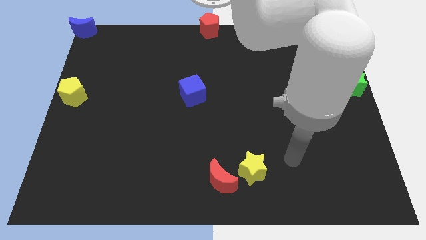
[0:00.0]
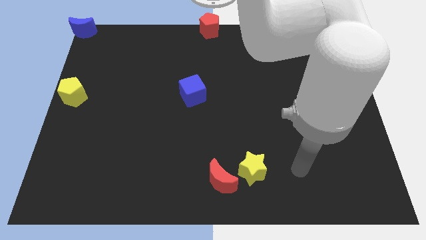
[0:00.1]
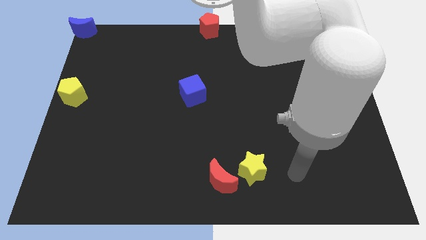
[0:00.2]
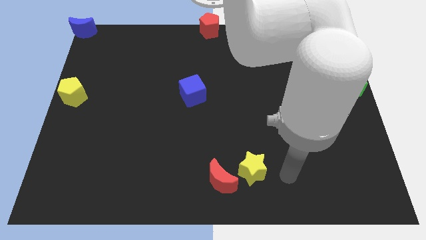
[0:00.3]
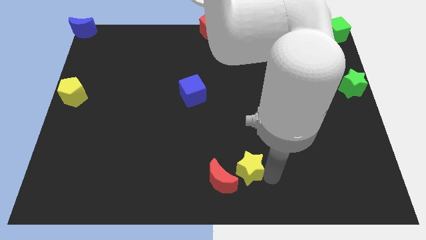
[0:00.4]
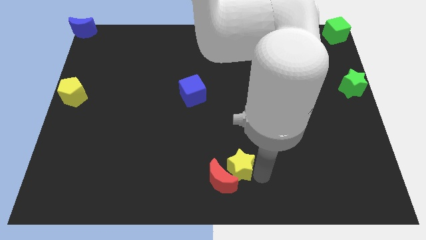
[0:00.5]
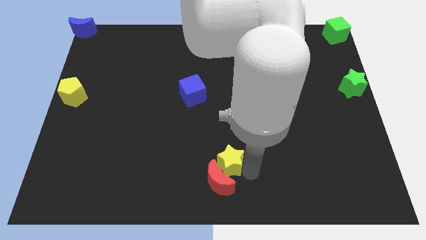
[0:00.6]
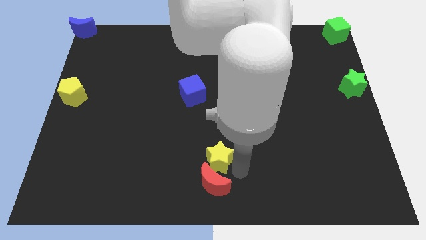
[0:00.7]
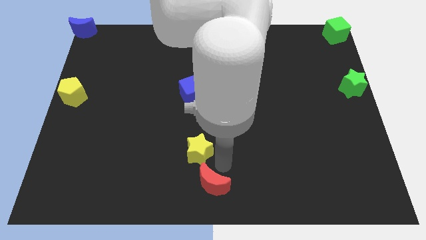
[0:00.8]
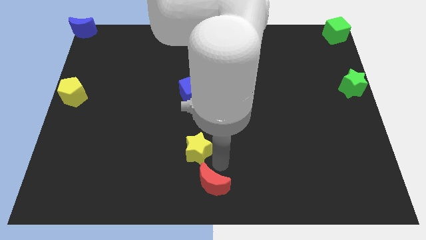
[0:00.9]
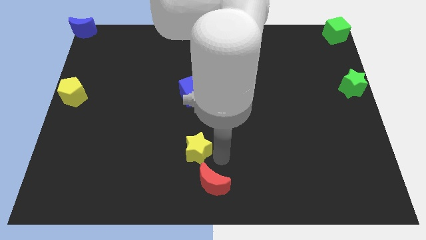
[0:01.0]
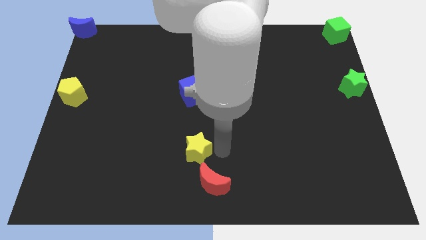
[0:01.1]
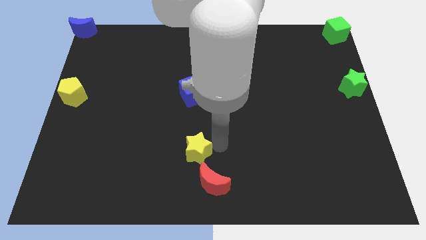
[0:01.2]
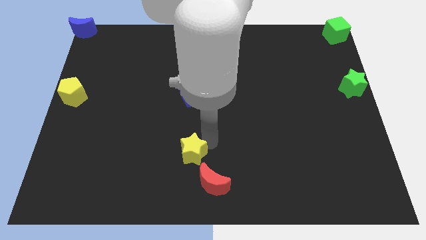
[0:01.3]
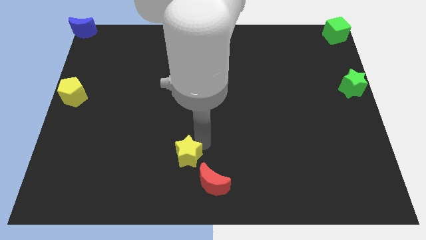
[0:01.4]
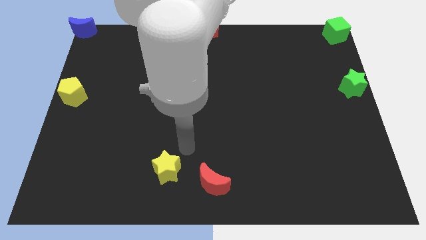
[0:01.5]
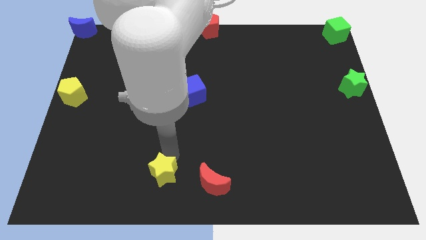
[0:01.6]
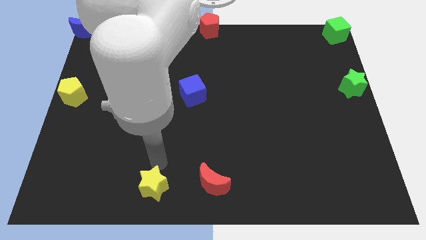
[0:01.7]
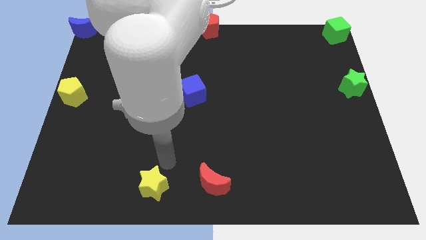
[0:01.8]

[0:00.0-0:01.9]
move the yellow star left to red crescent

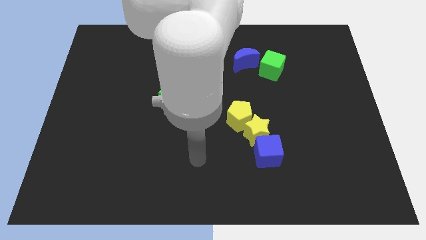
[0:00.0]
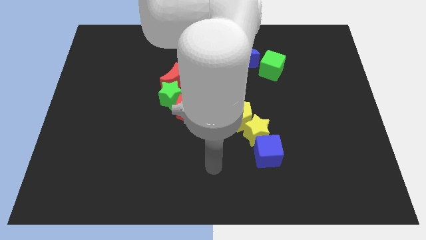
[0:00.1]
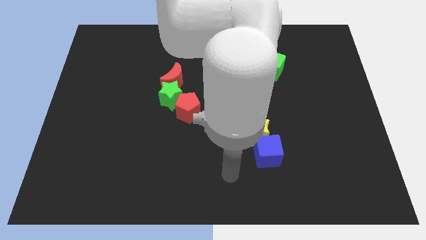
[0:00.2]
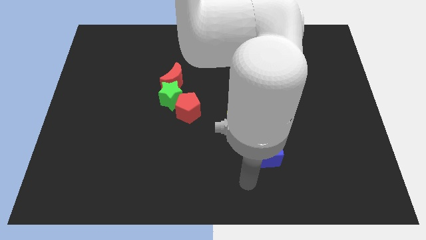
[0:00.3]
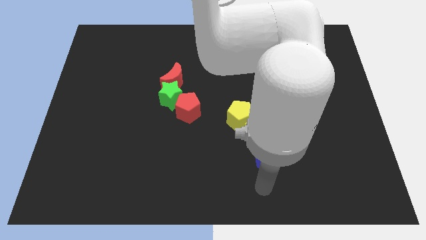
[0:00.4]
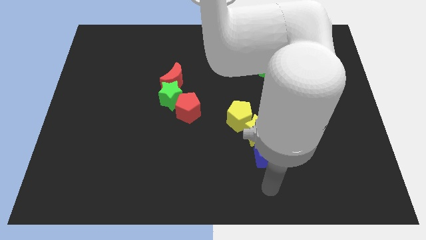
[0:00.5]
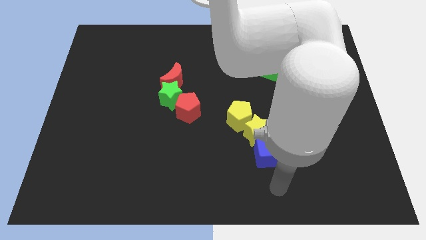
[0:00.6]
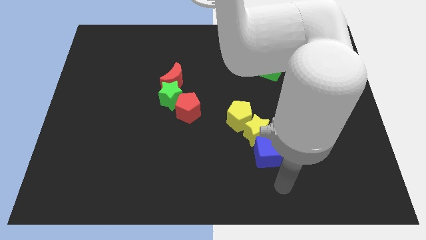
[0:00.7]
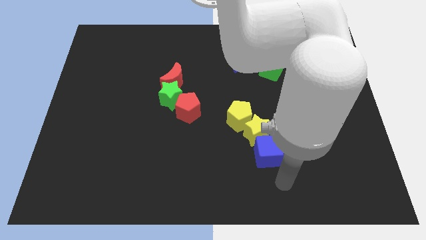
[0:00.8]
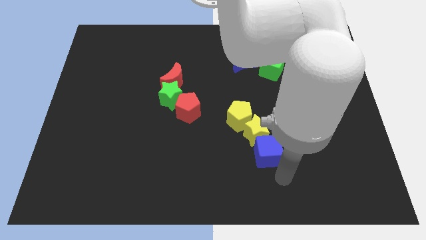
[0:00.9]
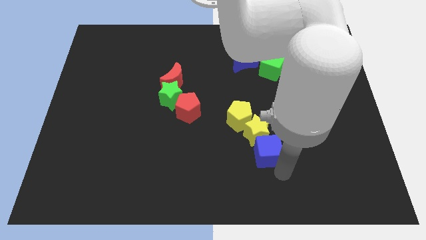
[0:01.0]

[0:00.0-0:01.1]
move blue cube into yellow star

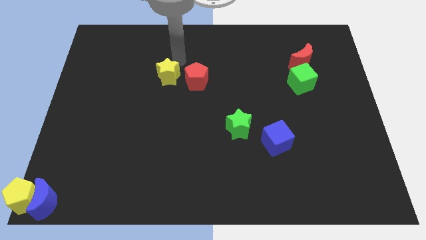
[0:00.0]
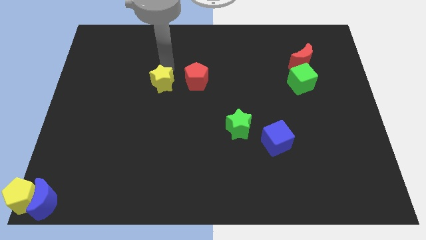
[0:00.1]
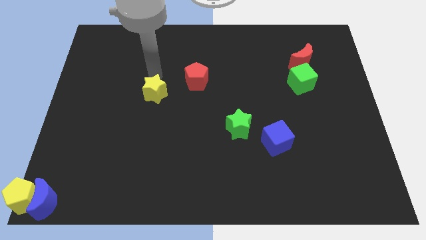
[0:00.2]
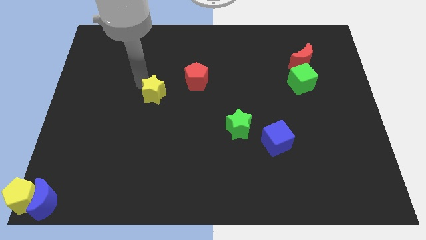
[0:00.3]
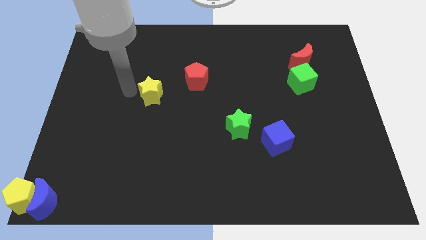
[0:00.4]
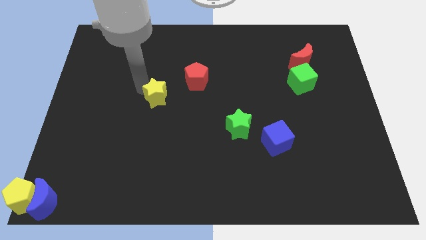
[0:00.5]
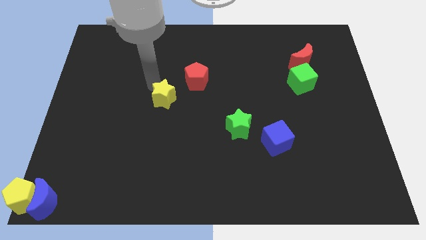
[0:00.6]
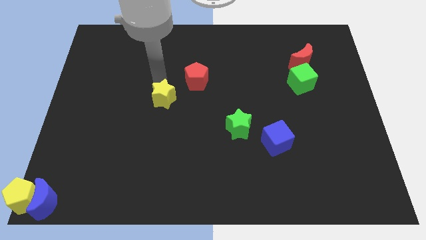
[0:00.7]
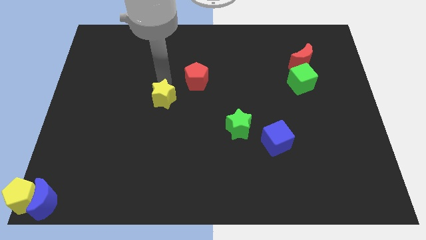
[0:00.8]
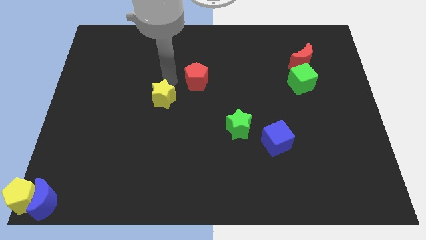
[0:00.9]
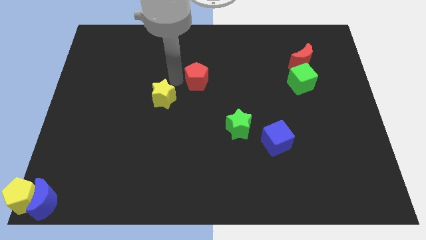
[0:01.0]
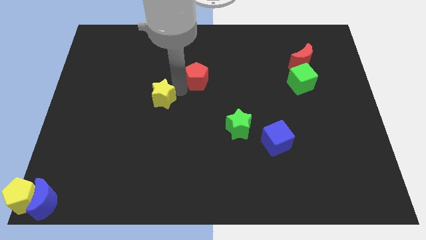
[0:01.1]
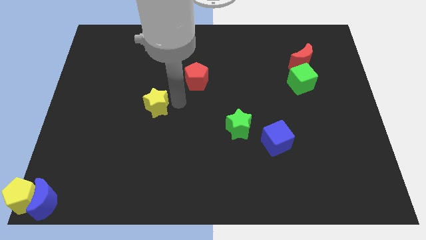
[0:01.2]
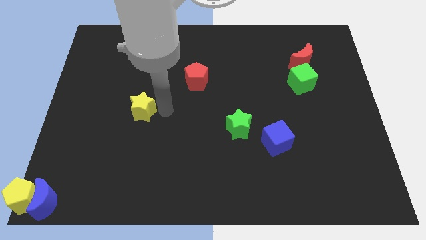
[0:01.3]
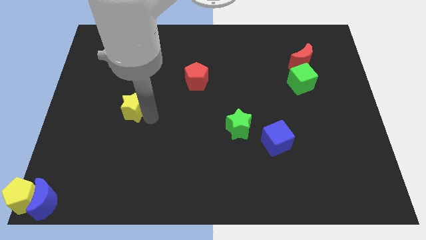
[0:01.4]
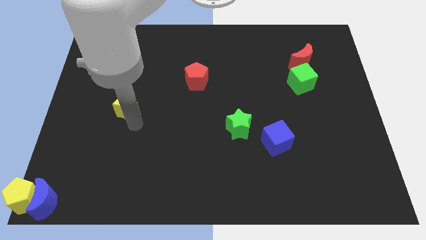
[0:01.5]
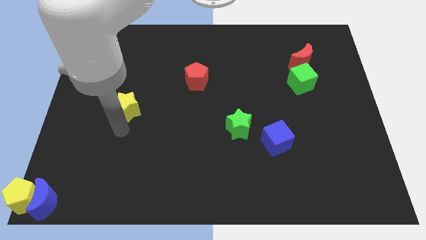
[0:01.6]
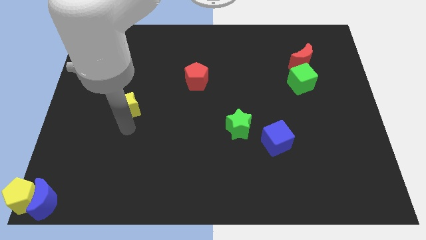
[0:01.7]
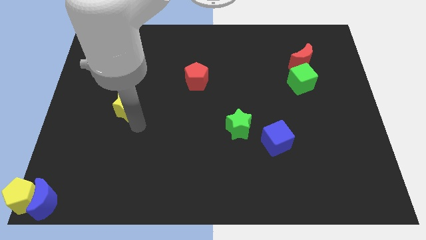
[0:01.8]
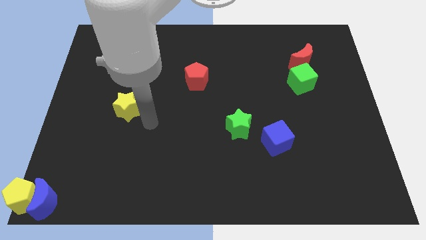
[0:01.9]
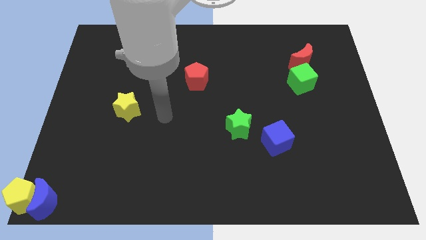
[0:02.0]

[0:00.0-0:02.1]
separate the yellow star from the red pentagon

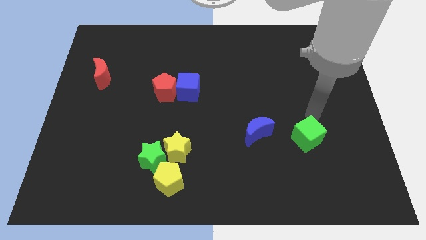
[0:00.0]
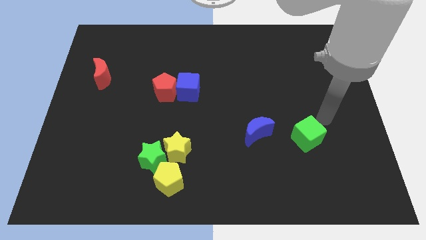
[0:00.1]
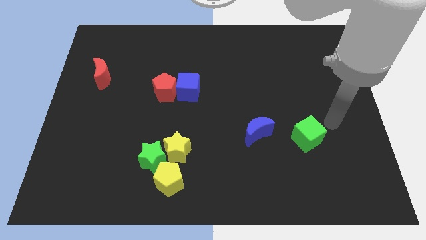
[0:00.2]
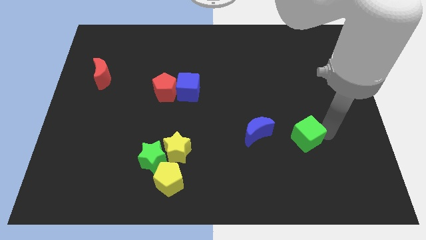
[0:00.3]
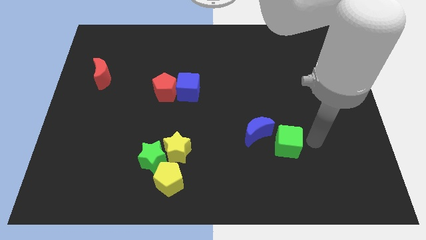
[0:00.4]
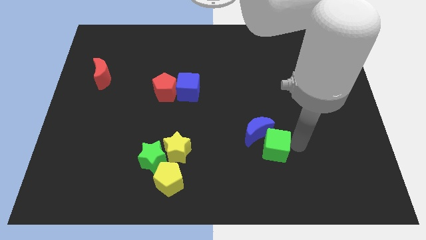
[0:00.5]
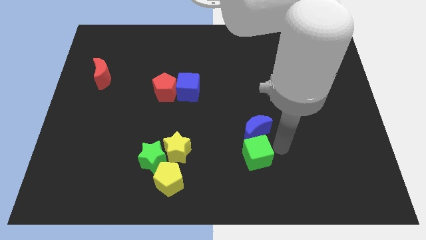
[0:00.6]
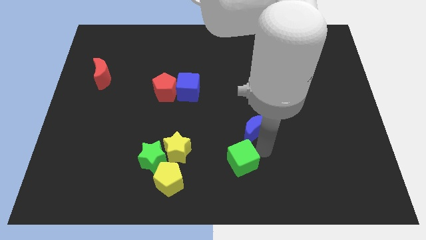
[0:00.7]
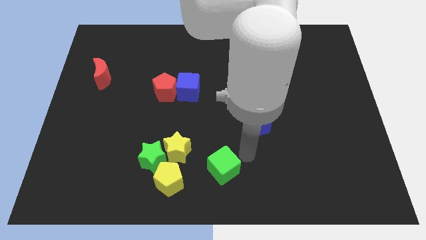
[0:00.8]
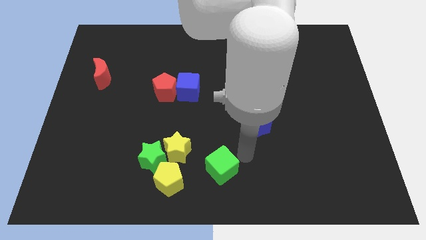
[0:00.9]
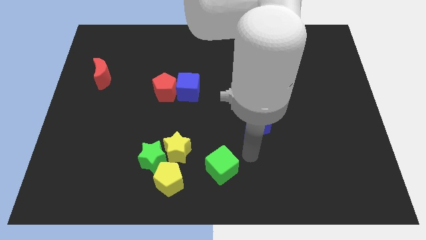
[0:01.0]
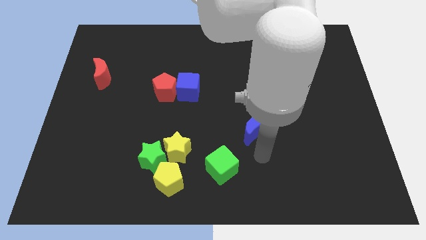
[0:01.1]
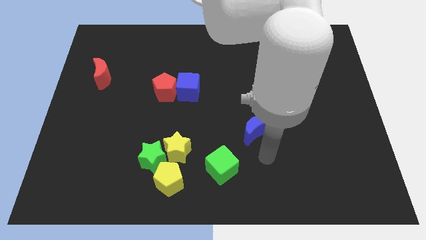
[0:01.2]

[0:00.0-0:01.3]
place the green cube diagonally below blue moon

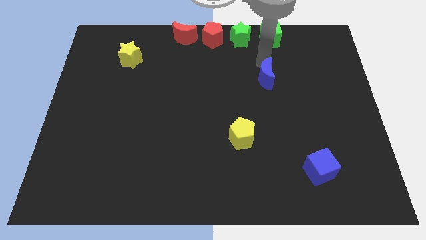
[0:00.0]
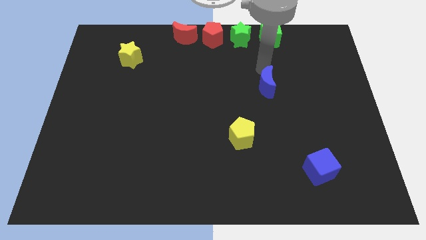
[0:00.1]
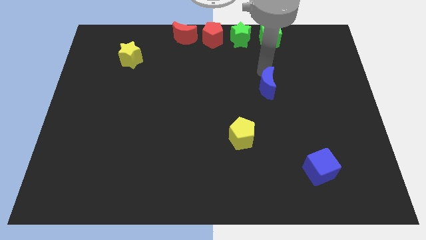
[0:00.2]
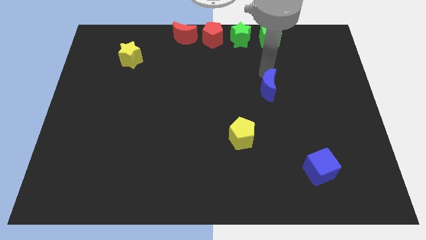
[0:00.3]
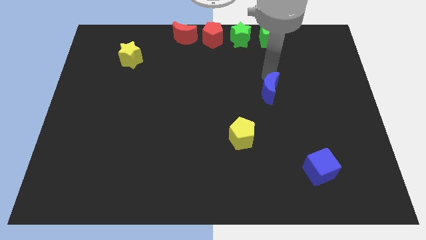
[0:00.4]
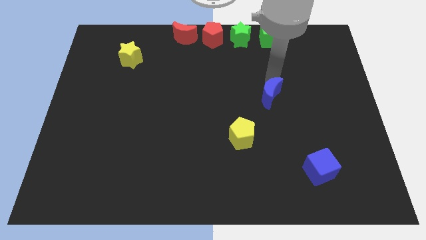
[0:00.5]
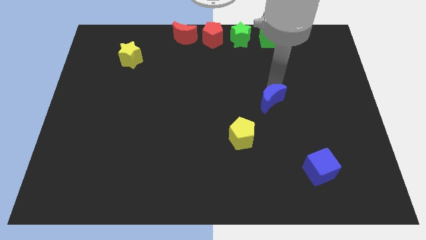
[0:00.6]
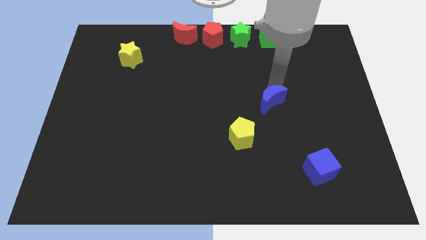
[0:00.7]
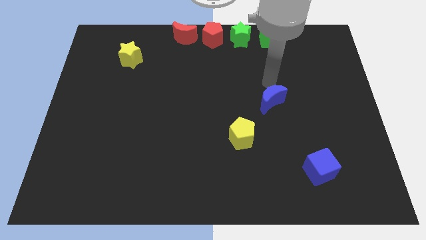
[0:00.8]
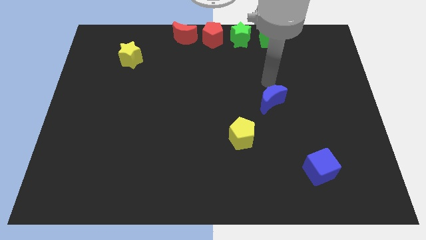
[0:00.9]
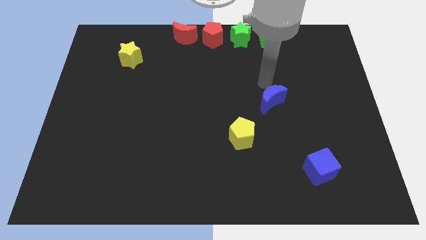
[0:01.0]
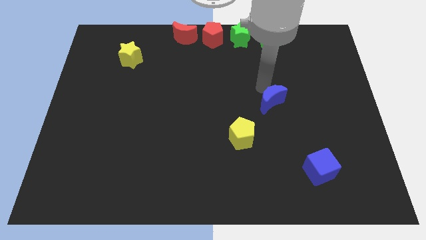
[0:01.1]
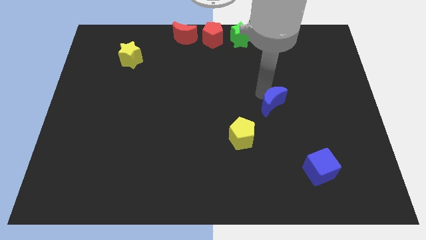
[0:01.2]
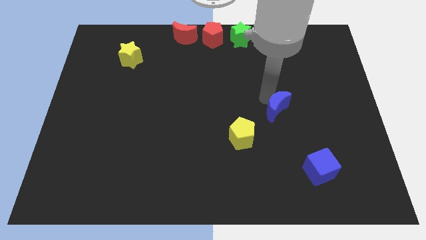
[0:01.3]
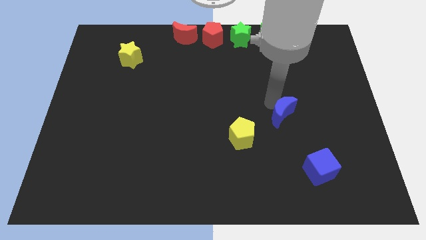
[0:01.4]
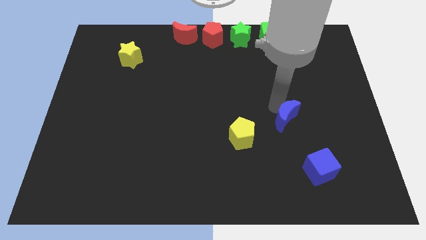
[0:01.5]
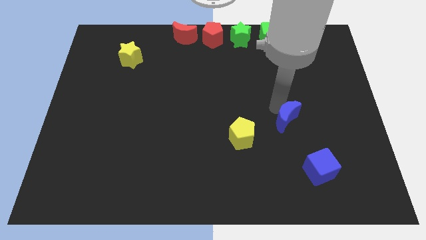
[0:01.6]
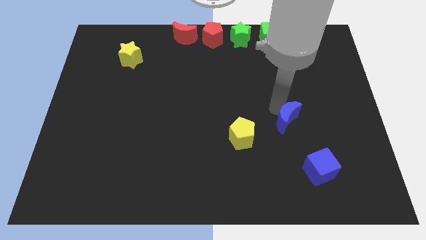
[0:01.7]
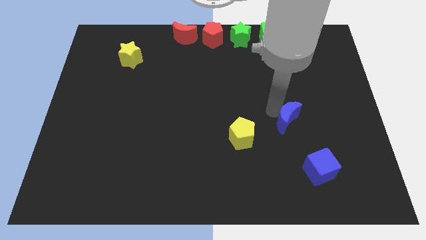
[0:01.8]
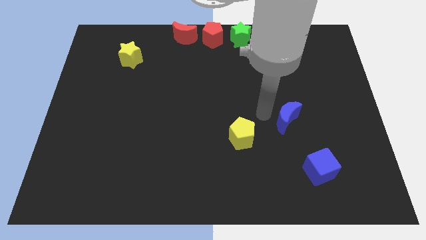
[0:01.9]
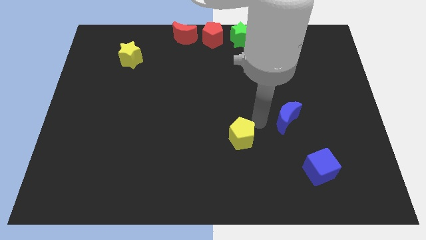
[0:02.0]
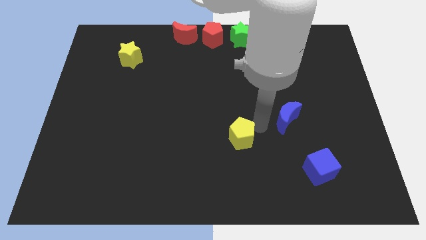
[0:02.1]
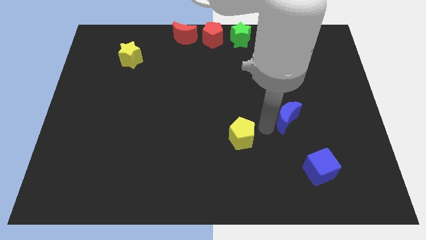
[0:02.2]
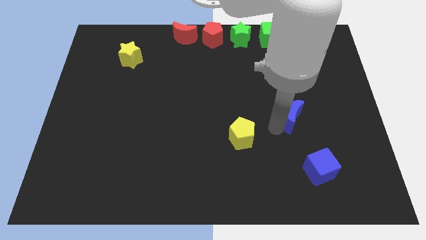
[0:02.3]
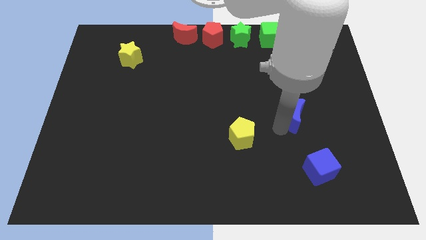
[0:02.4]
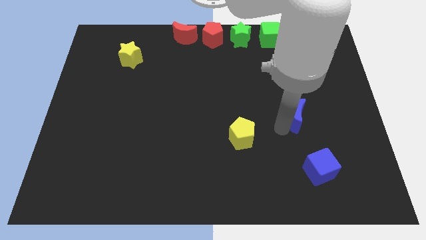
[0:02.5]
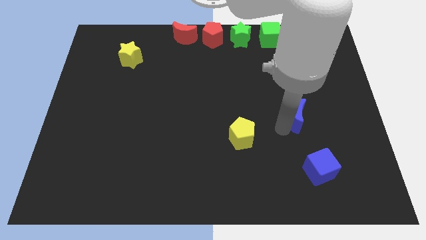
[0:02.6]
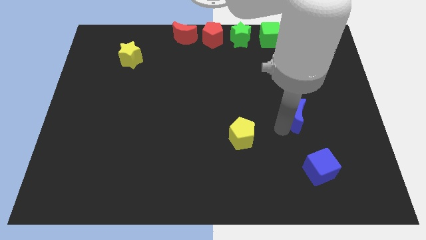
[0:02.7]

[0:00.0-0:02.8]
push the blue crescent towards the bottom of the board
